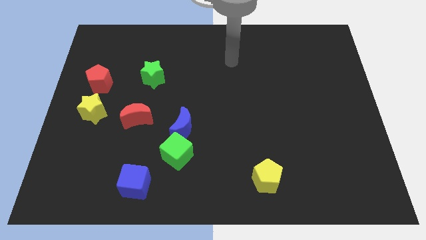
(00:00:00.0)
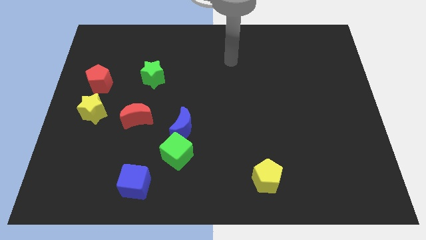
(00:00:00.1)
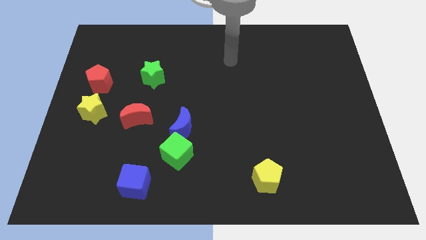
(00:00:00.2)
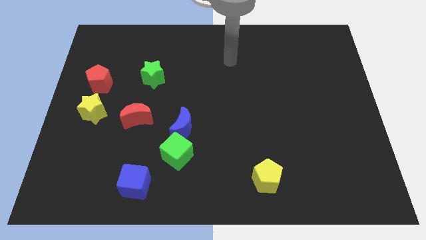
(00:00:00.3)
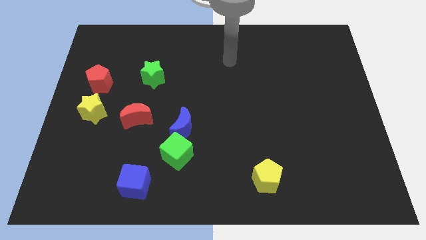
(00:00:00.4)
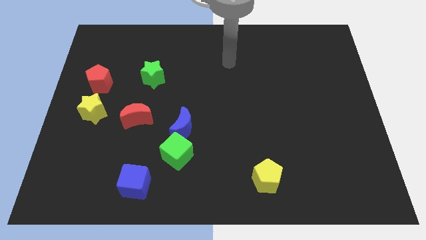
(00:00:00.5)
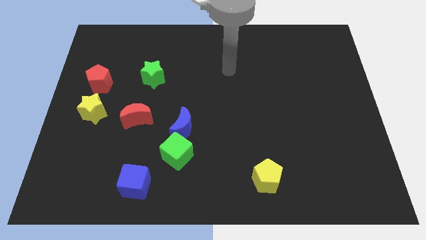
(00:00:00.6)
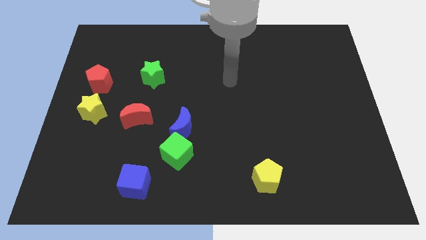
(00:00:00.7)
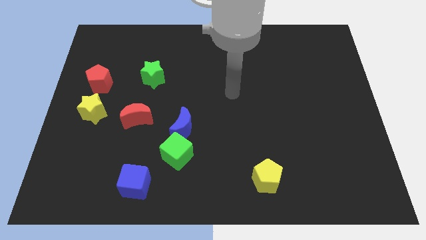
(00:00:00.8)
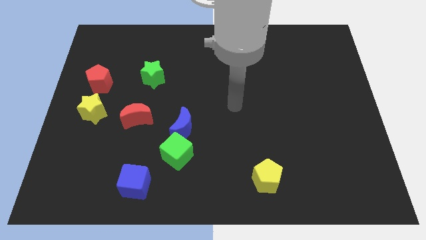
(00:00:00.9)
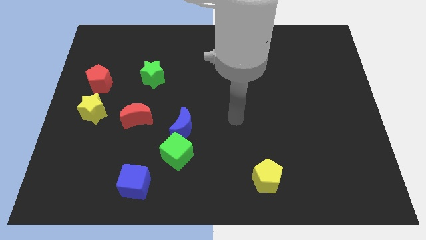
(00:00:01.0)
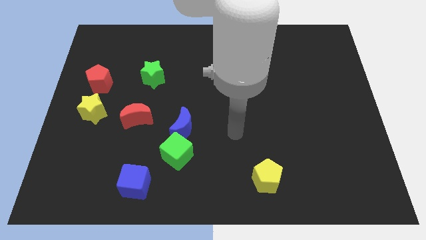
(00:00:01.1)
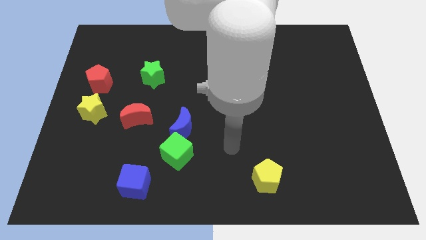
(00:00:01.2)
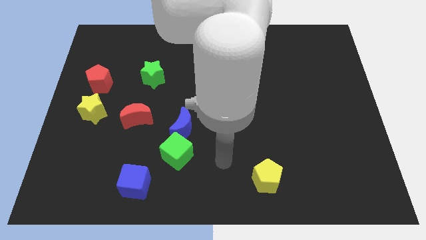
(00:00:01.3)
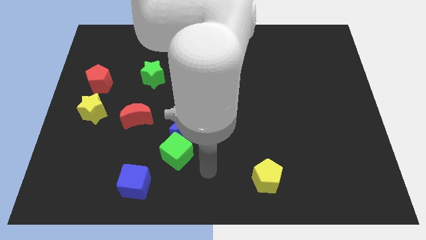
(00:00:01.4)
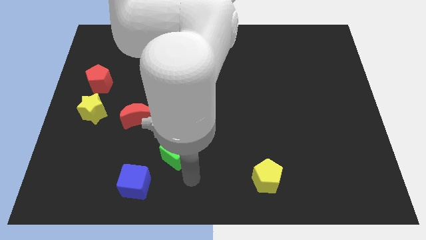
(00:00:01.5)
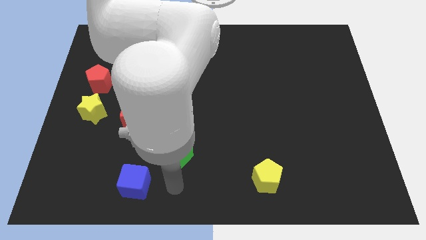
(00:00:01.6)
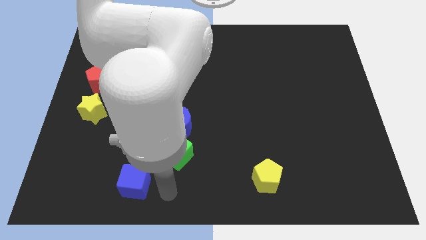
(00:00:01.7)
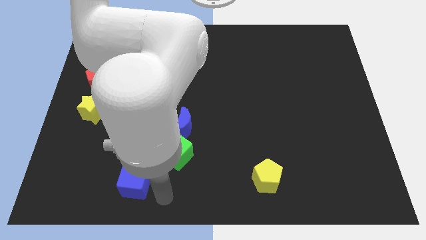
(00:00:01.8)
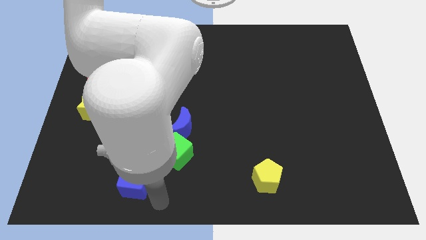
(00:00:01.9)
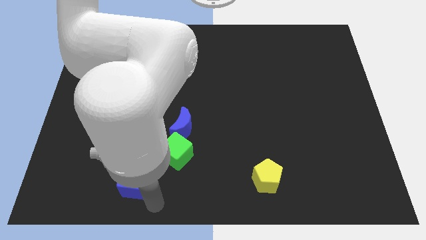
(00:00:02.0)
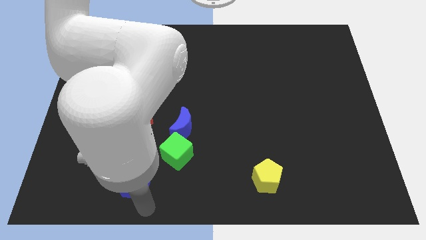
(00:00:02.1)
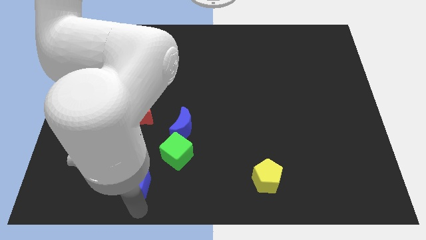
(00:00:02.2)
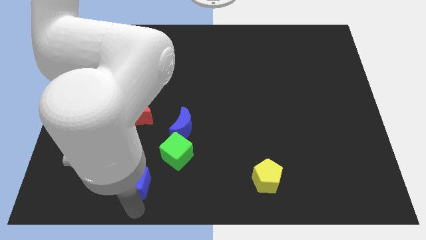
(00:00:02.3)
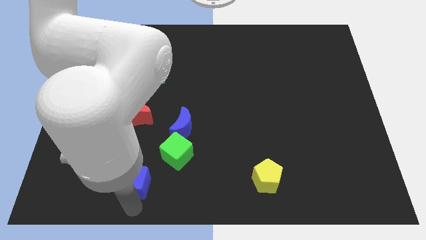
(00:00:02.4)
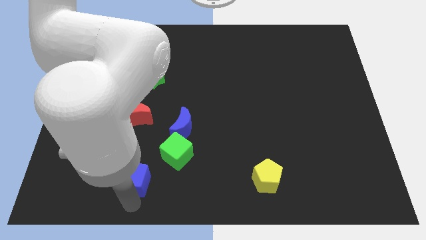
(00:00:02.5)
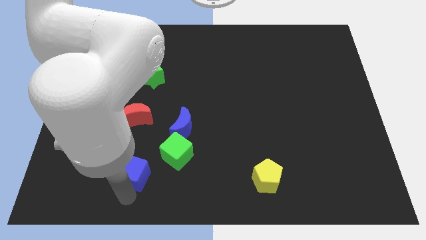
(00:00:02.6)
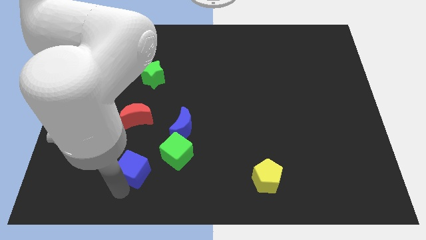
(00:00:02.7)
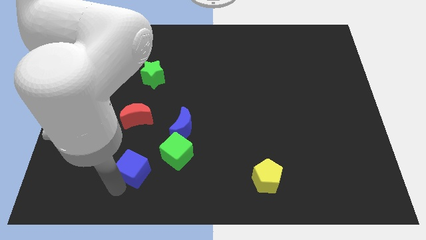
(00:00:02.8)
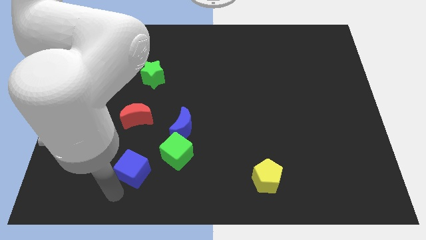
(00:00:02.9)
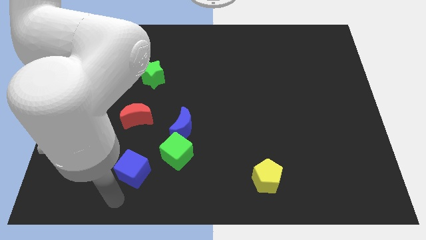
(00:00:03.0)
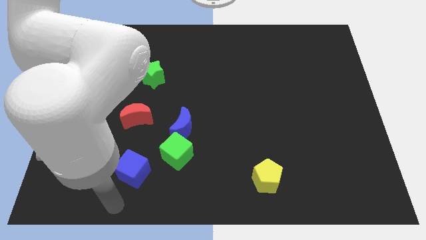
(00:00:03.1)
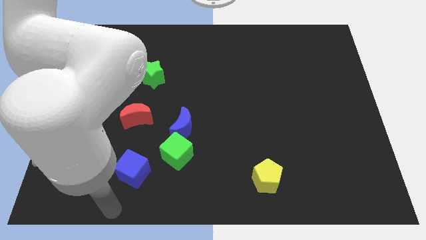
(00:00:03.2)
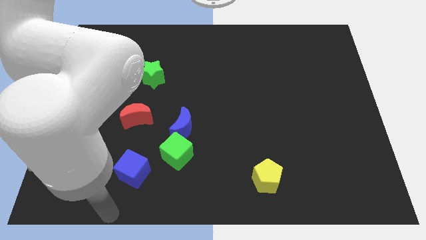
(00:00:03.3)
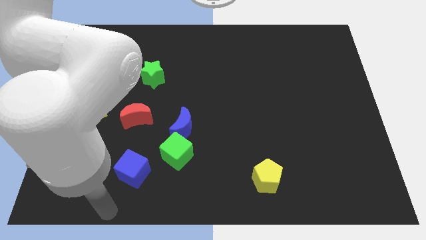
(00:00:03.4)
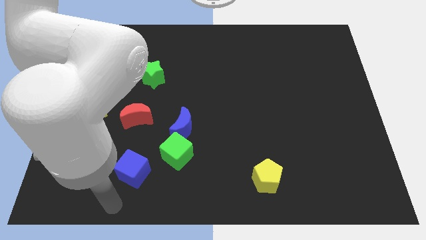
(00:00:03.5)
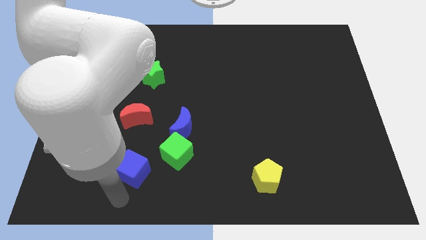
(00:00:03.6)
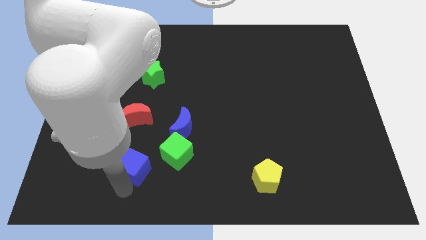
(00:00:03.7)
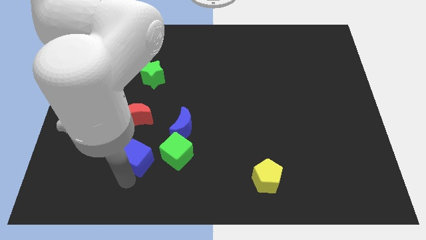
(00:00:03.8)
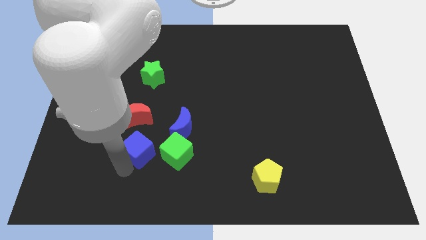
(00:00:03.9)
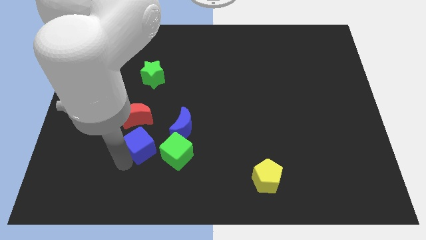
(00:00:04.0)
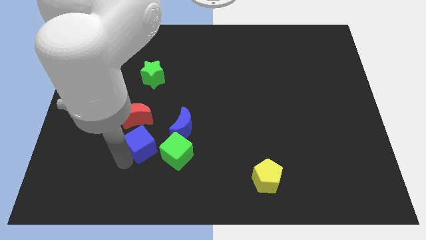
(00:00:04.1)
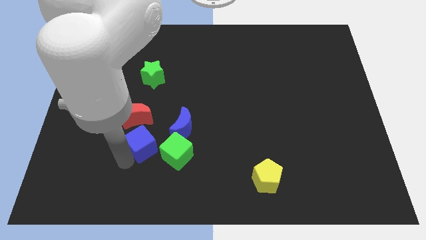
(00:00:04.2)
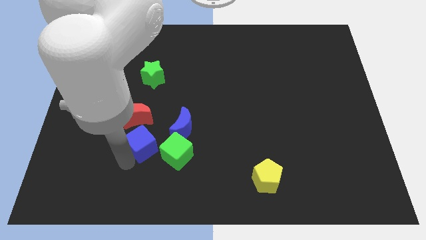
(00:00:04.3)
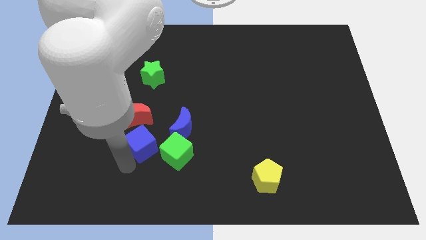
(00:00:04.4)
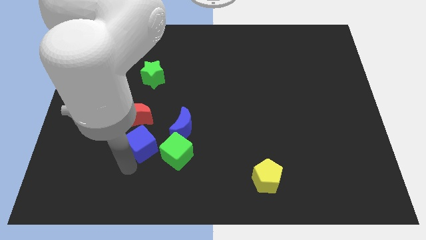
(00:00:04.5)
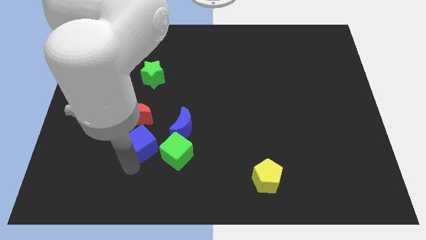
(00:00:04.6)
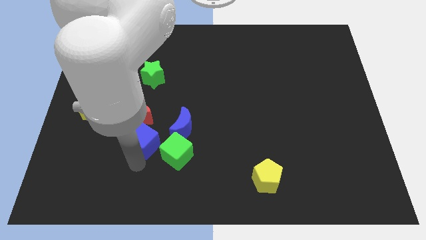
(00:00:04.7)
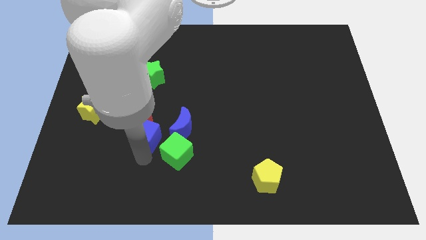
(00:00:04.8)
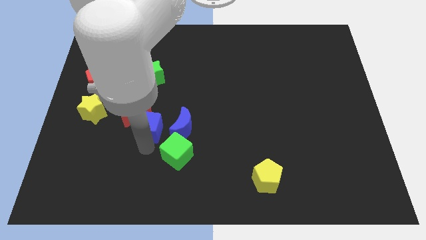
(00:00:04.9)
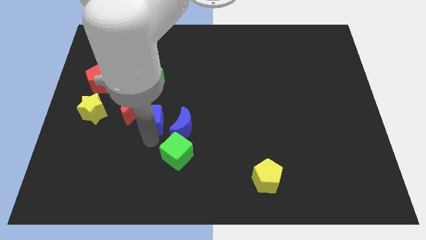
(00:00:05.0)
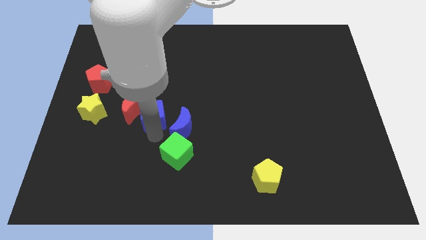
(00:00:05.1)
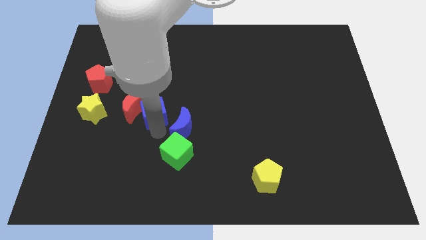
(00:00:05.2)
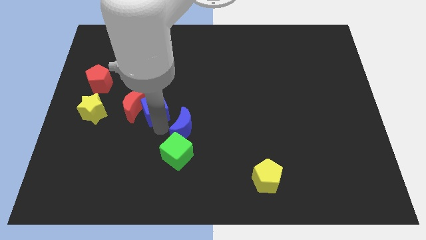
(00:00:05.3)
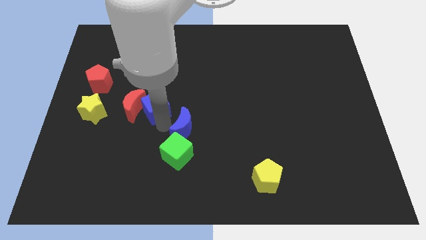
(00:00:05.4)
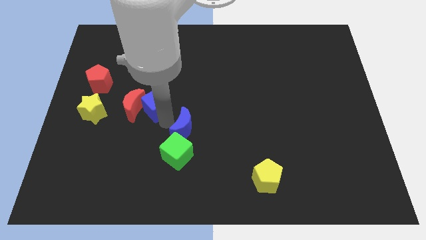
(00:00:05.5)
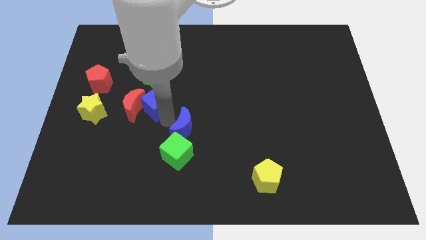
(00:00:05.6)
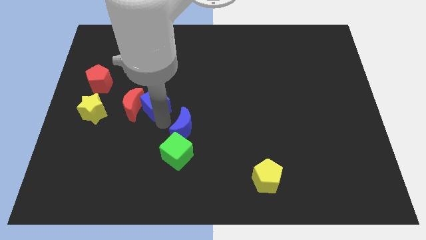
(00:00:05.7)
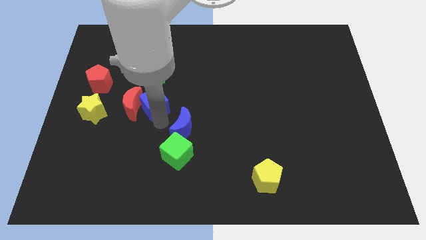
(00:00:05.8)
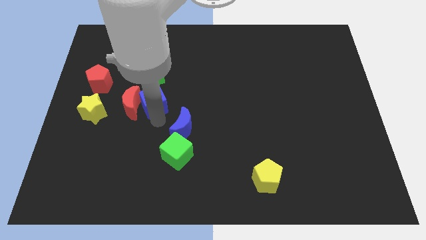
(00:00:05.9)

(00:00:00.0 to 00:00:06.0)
place the blue cube between red moon and blue moon

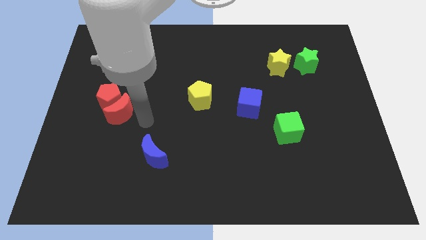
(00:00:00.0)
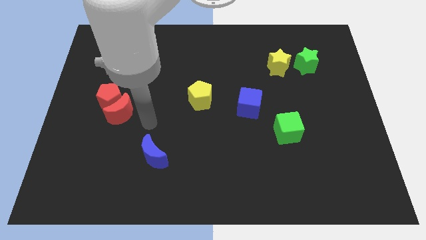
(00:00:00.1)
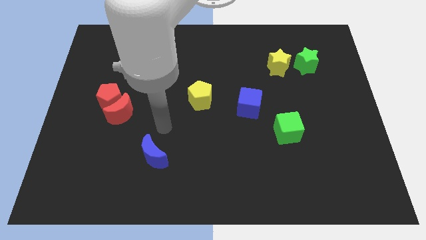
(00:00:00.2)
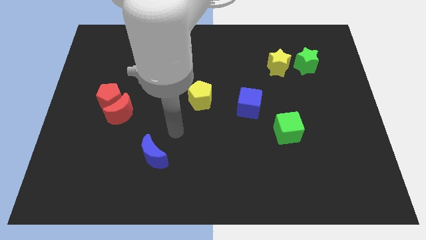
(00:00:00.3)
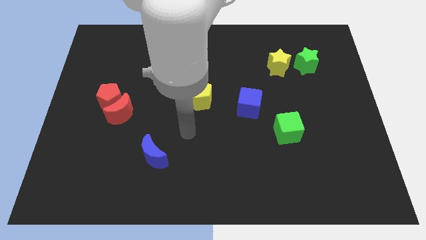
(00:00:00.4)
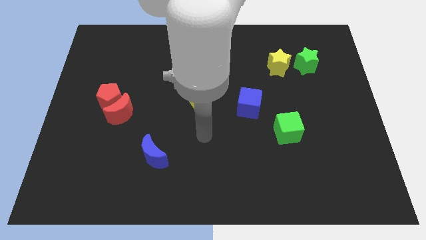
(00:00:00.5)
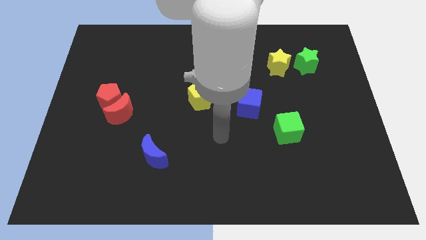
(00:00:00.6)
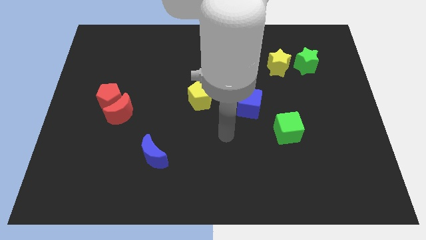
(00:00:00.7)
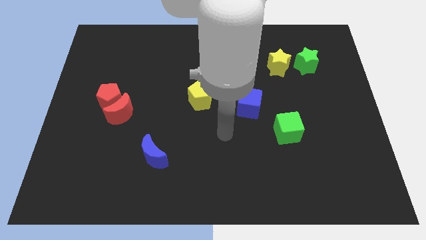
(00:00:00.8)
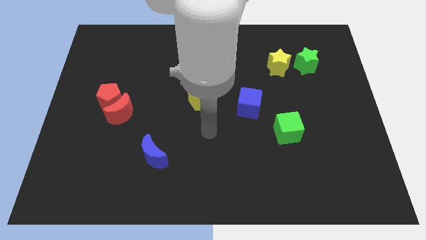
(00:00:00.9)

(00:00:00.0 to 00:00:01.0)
go away from the red moon

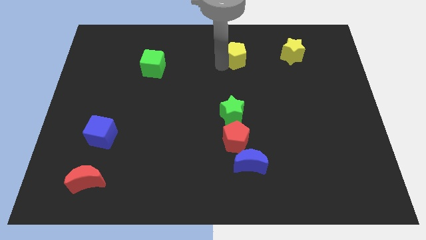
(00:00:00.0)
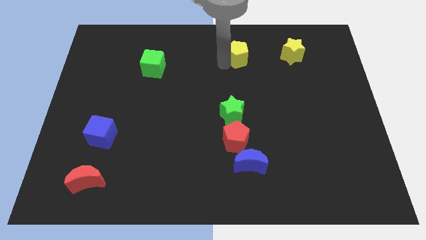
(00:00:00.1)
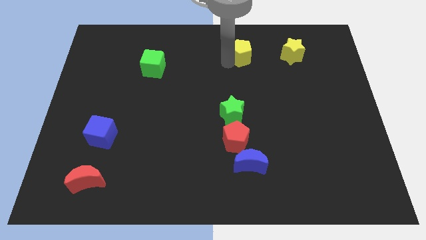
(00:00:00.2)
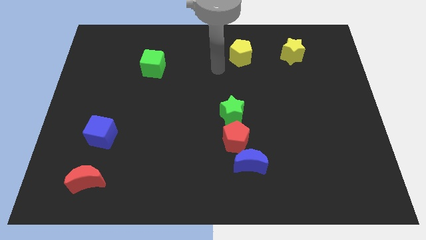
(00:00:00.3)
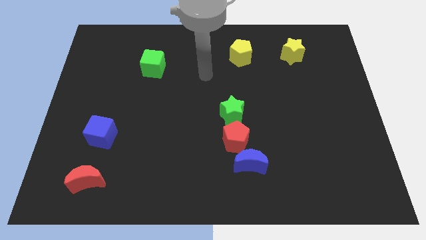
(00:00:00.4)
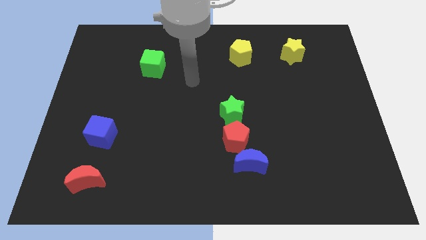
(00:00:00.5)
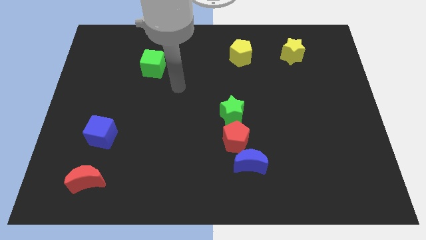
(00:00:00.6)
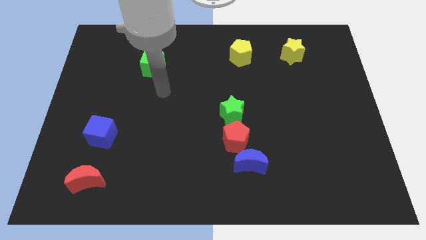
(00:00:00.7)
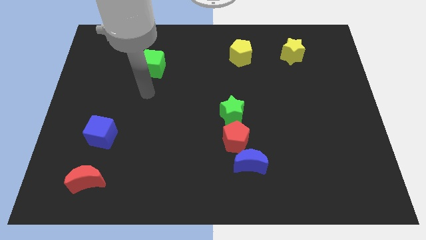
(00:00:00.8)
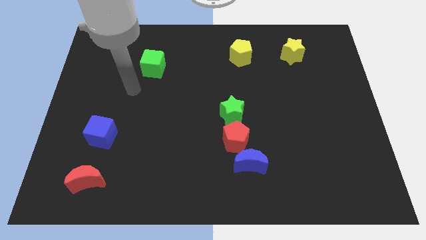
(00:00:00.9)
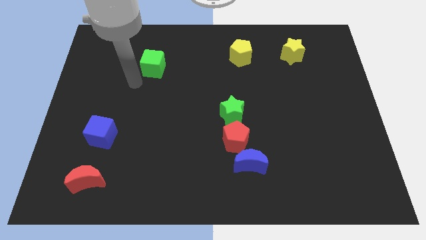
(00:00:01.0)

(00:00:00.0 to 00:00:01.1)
slightly move the yellow pentagon to the left of the yellow star

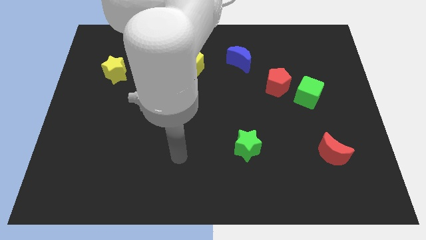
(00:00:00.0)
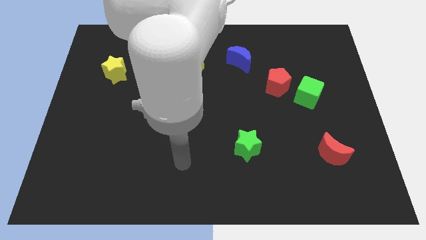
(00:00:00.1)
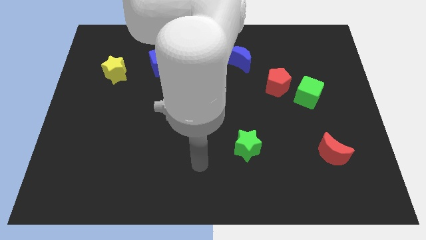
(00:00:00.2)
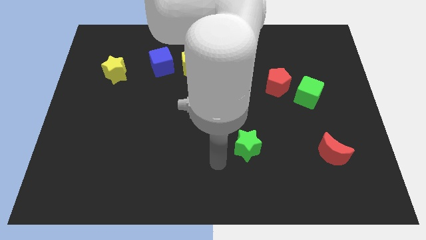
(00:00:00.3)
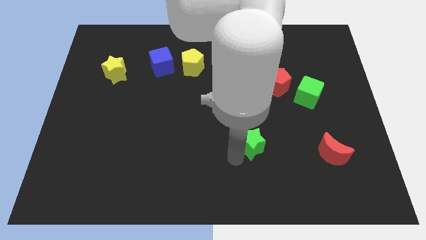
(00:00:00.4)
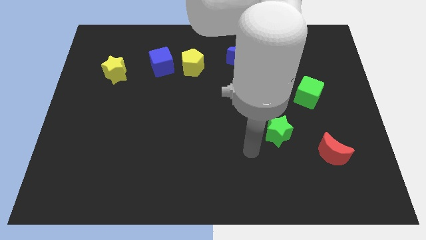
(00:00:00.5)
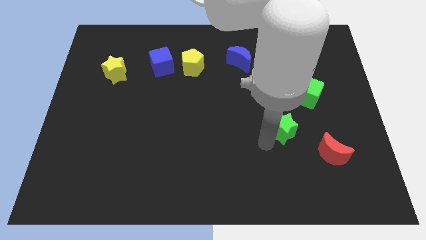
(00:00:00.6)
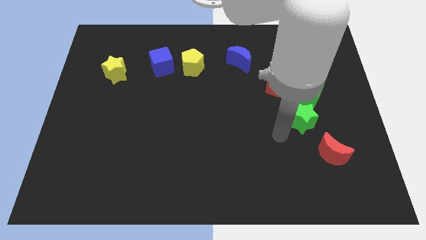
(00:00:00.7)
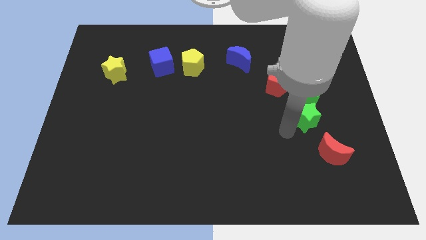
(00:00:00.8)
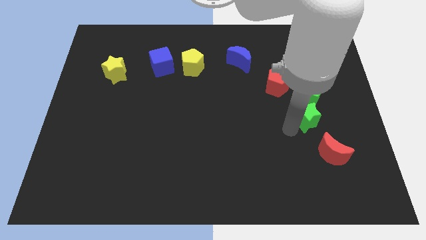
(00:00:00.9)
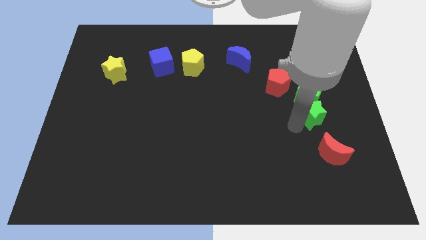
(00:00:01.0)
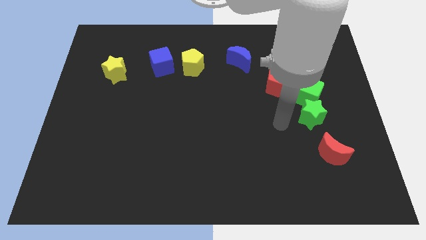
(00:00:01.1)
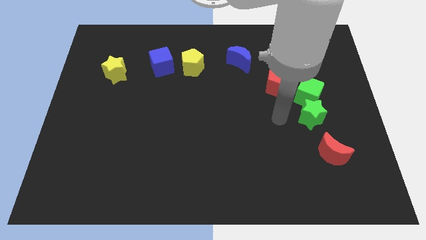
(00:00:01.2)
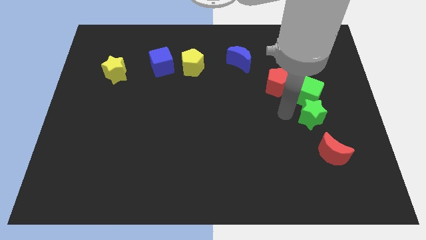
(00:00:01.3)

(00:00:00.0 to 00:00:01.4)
push the green star to the bottom side of the green cube
